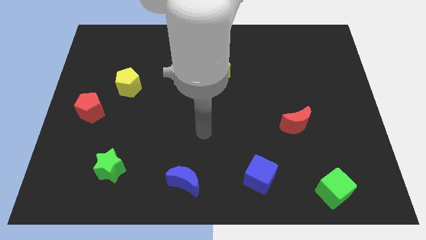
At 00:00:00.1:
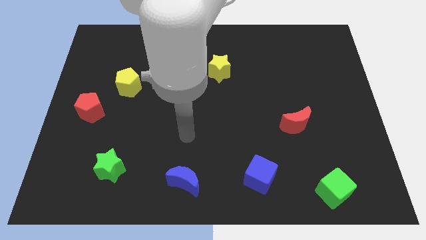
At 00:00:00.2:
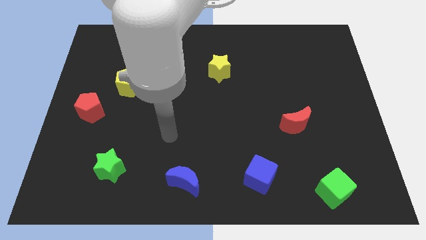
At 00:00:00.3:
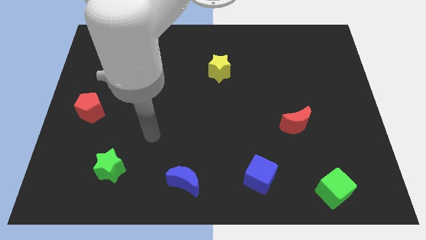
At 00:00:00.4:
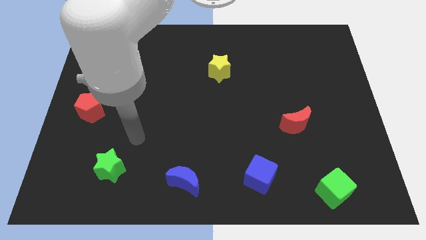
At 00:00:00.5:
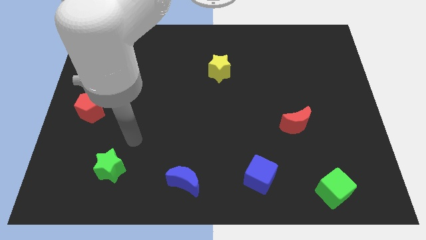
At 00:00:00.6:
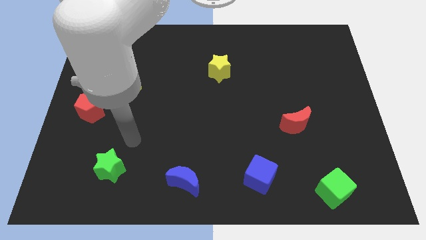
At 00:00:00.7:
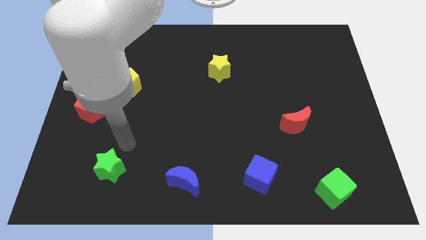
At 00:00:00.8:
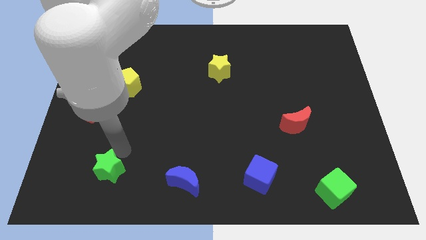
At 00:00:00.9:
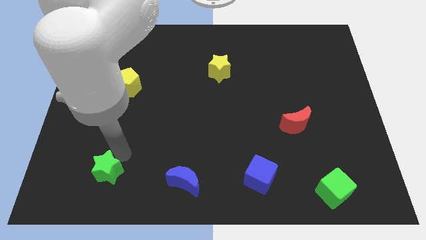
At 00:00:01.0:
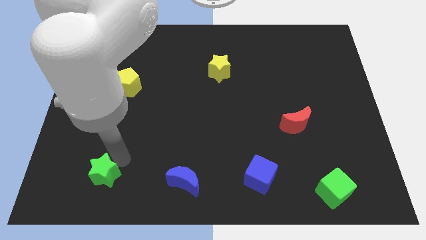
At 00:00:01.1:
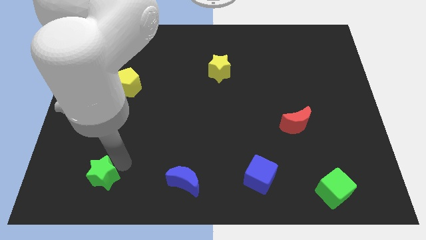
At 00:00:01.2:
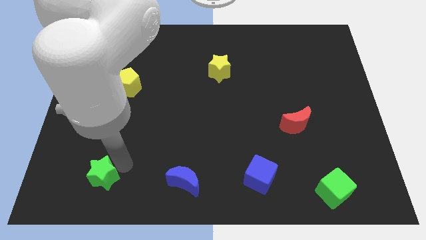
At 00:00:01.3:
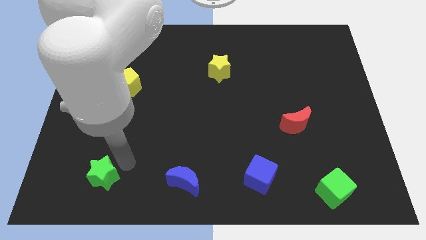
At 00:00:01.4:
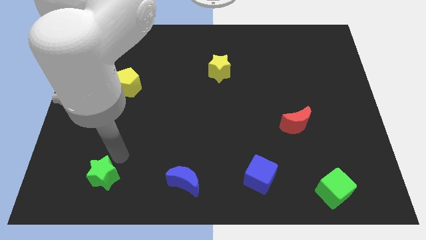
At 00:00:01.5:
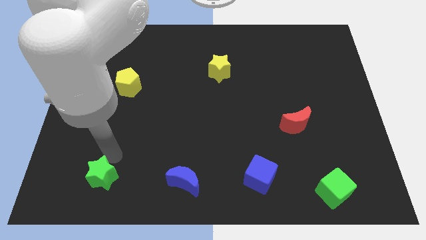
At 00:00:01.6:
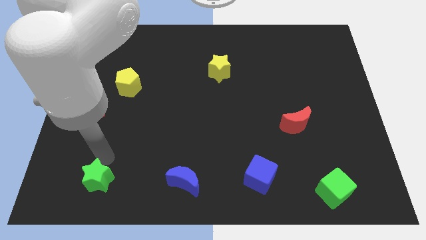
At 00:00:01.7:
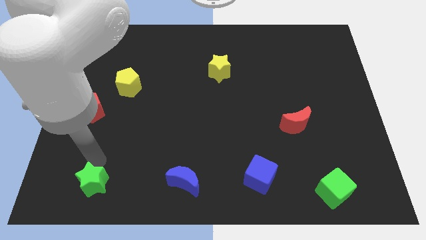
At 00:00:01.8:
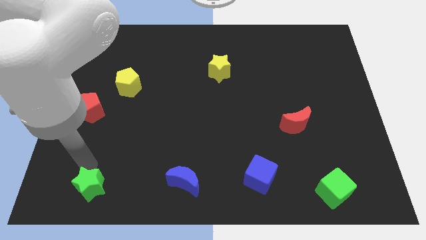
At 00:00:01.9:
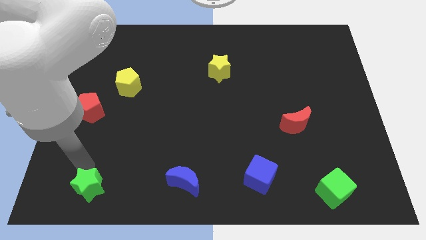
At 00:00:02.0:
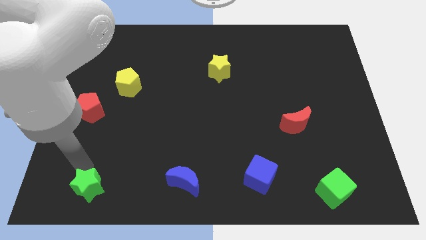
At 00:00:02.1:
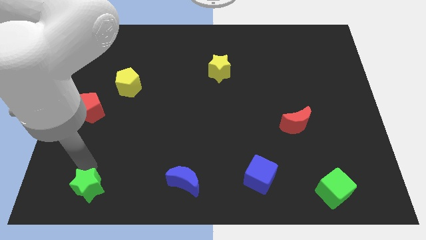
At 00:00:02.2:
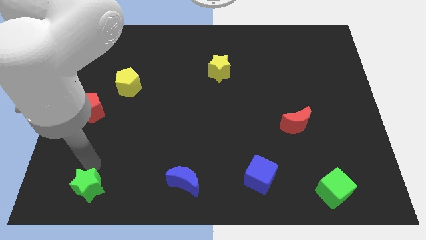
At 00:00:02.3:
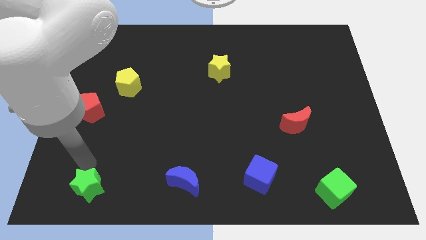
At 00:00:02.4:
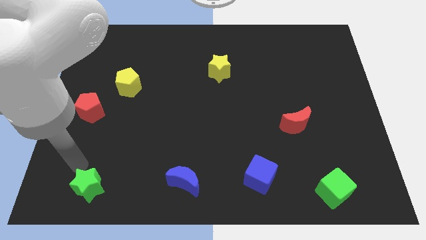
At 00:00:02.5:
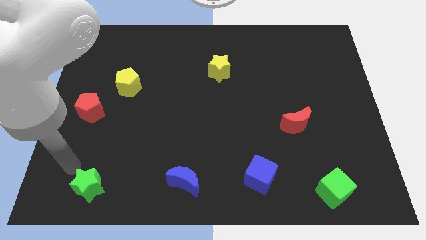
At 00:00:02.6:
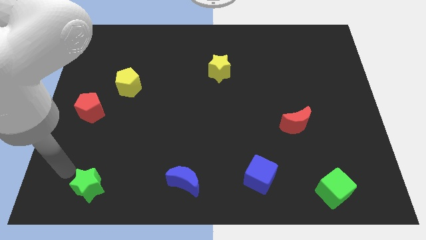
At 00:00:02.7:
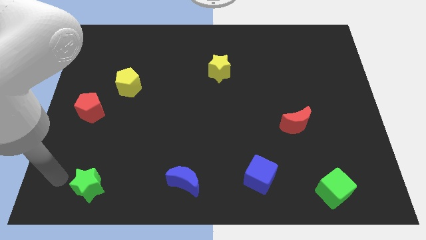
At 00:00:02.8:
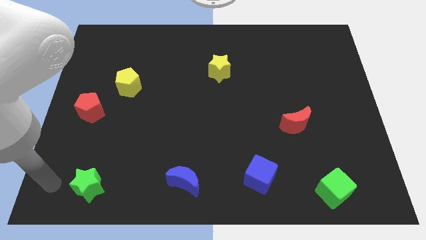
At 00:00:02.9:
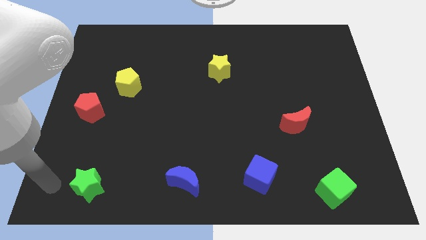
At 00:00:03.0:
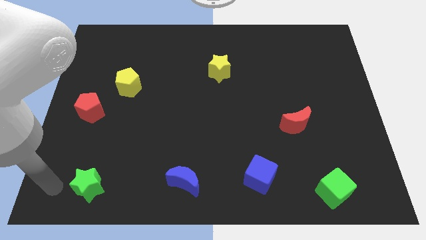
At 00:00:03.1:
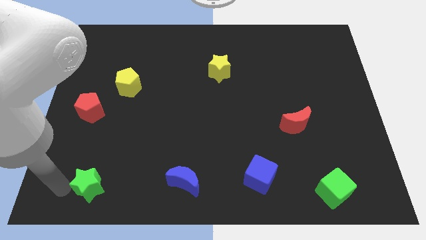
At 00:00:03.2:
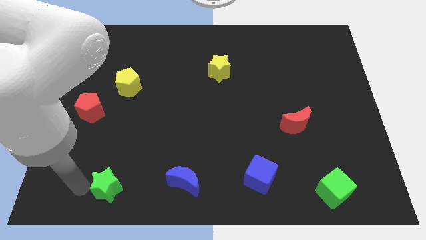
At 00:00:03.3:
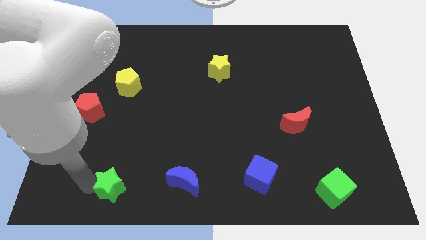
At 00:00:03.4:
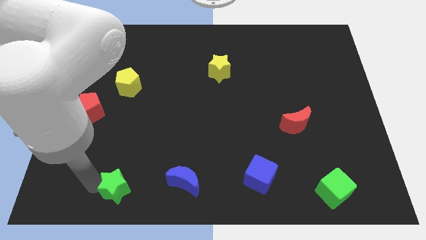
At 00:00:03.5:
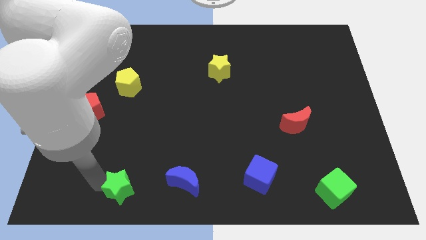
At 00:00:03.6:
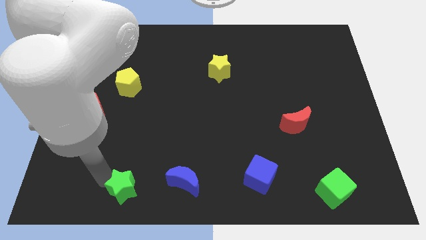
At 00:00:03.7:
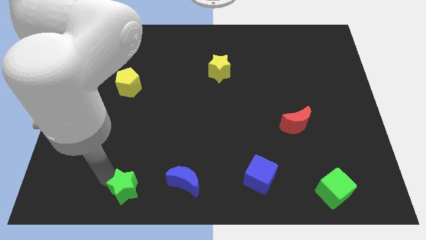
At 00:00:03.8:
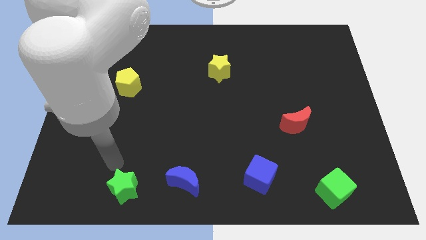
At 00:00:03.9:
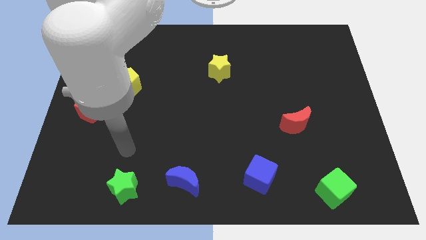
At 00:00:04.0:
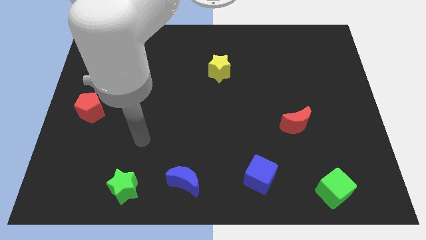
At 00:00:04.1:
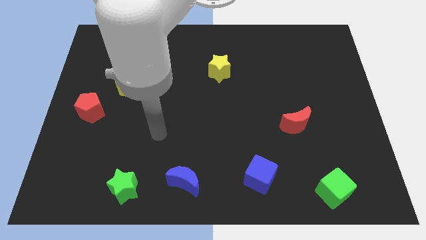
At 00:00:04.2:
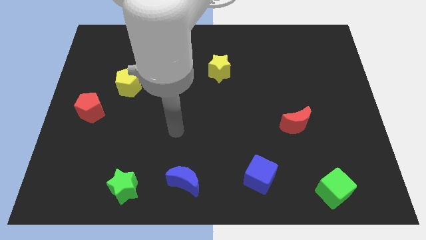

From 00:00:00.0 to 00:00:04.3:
place the green star to the left of the blue crescent

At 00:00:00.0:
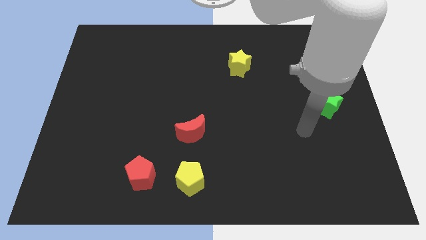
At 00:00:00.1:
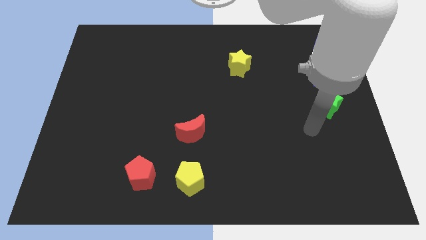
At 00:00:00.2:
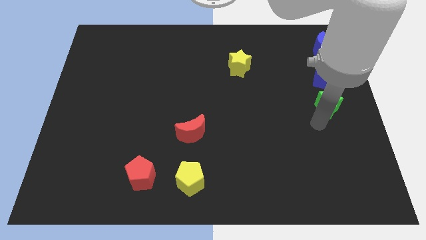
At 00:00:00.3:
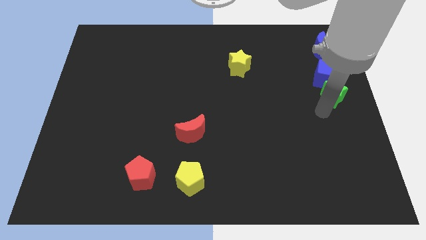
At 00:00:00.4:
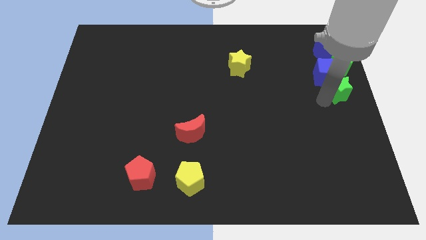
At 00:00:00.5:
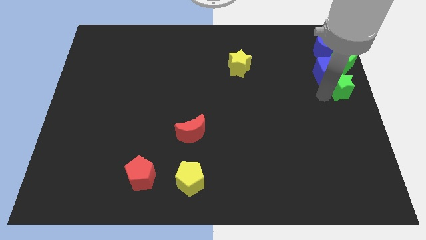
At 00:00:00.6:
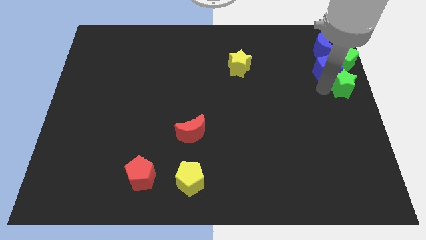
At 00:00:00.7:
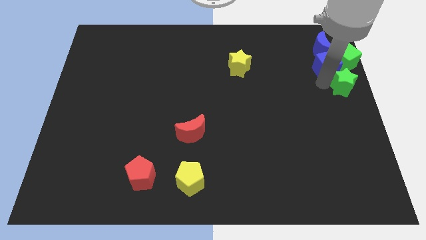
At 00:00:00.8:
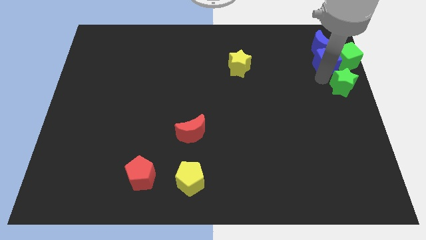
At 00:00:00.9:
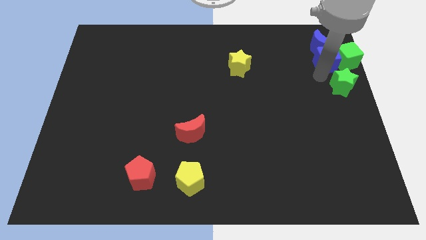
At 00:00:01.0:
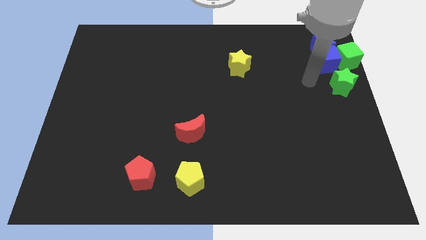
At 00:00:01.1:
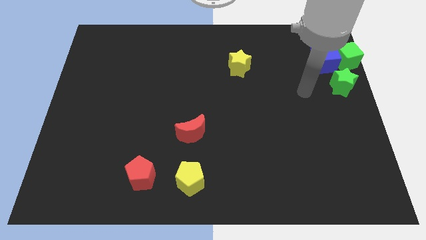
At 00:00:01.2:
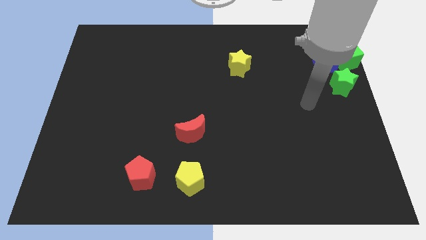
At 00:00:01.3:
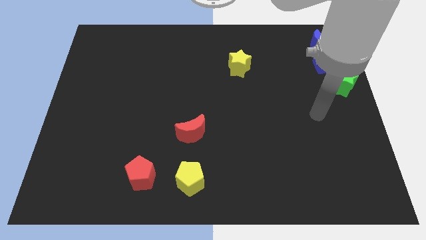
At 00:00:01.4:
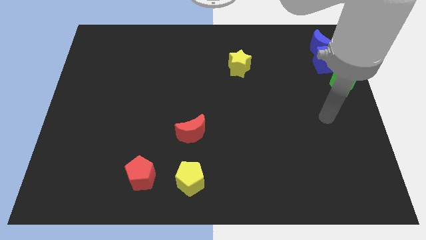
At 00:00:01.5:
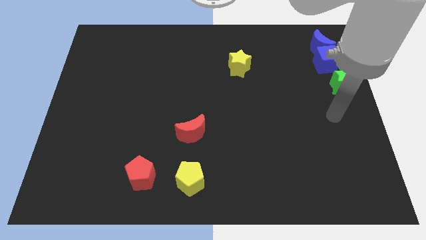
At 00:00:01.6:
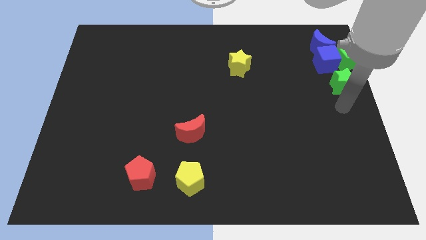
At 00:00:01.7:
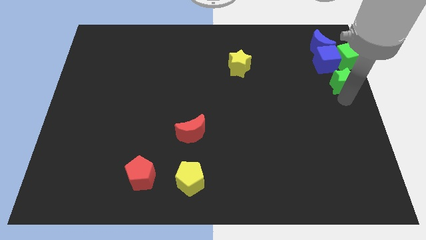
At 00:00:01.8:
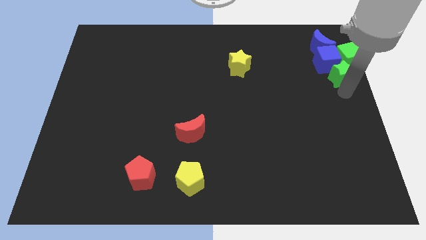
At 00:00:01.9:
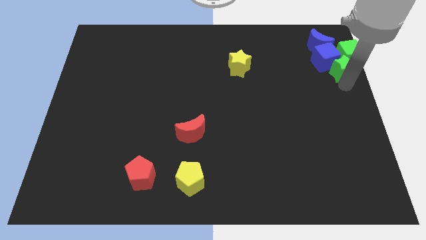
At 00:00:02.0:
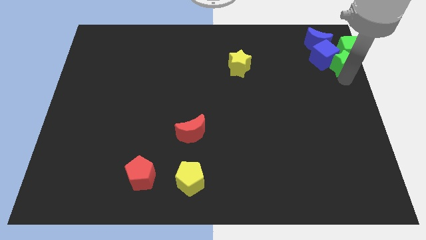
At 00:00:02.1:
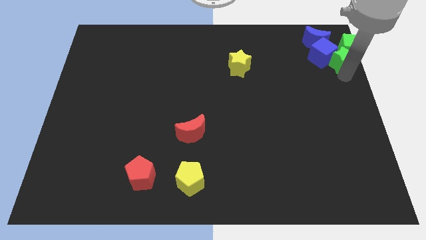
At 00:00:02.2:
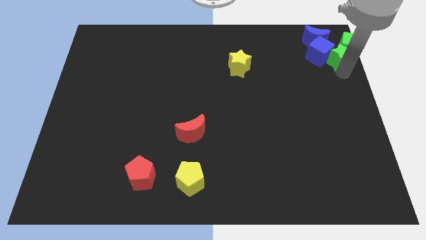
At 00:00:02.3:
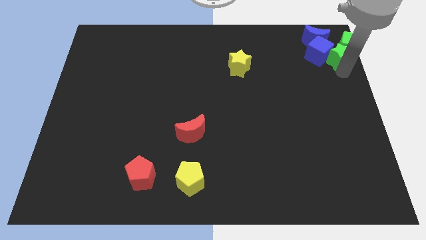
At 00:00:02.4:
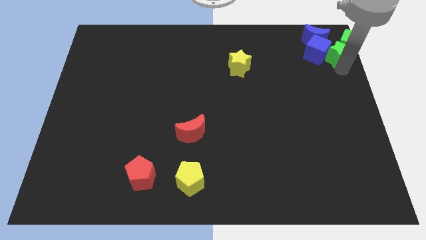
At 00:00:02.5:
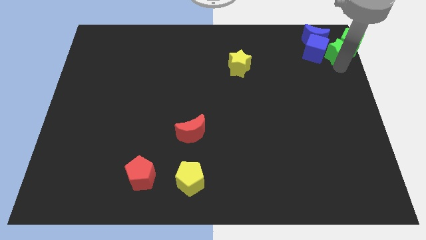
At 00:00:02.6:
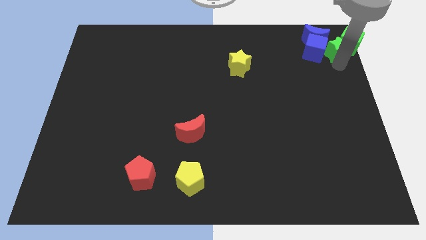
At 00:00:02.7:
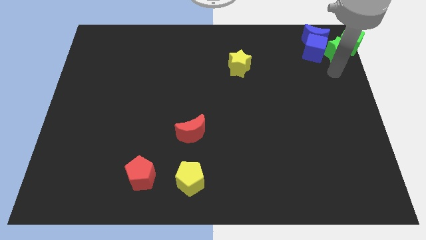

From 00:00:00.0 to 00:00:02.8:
push the green and blue blocks to the top right corner of the board

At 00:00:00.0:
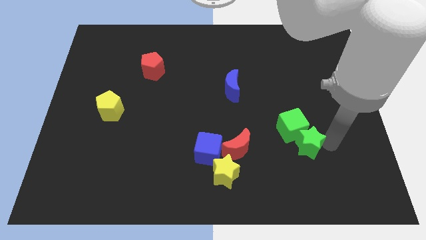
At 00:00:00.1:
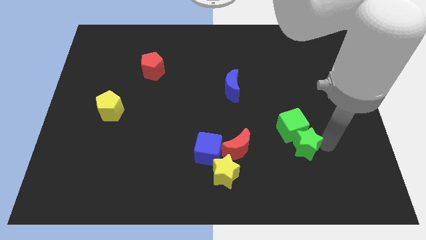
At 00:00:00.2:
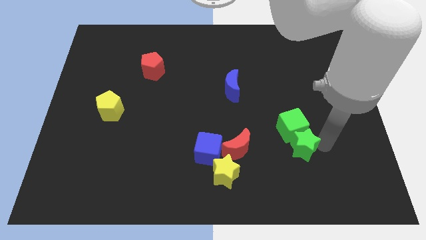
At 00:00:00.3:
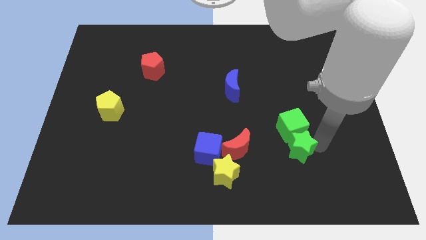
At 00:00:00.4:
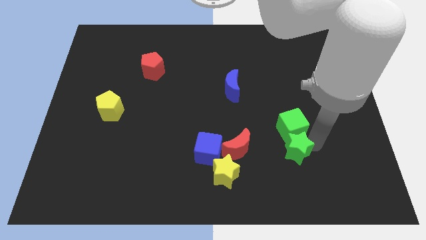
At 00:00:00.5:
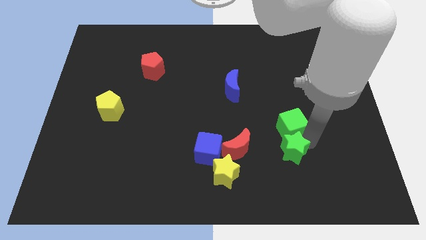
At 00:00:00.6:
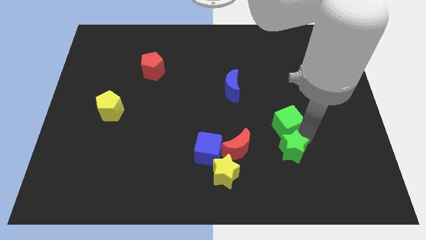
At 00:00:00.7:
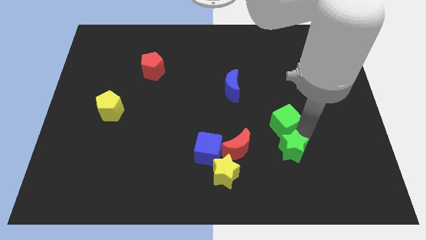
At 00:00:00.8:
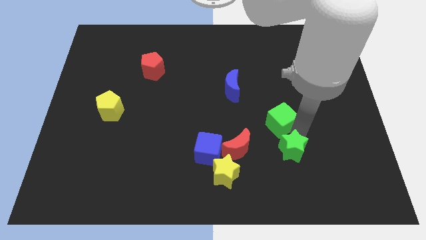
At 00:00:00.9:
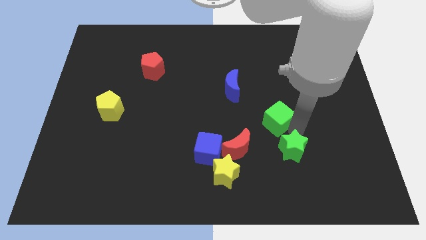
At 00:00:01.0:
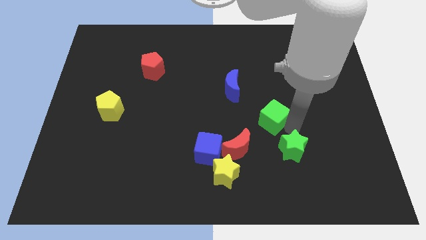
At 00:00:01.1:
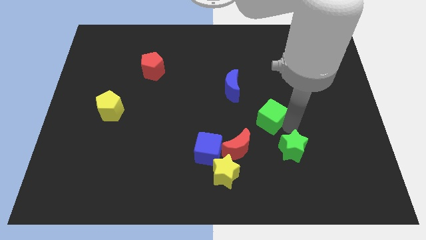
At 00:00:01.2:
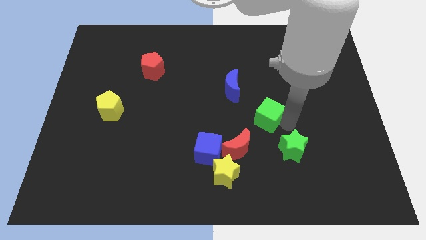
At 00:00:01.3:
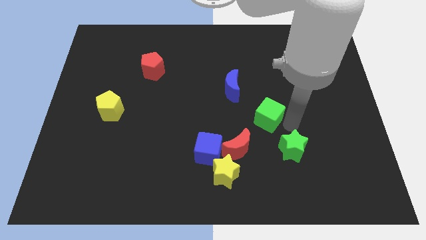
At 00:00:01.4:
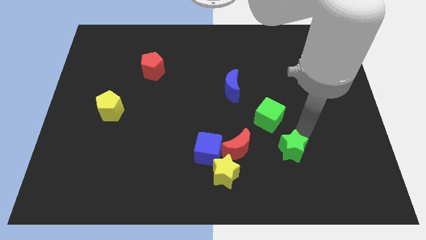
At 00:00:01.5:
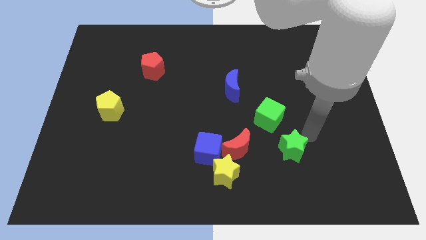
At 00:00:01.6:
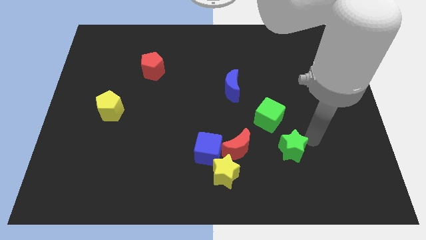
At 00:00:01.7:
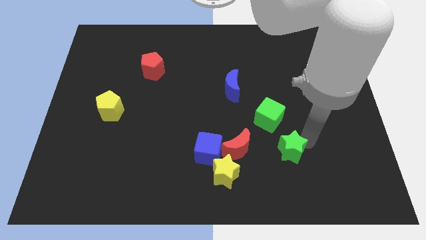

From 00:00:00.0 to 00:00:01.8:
separate green cube from the green star

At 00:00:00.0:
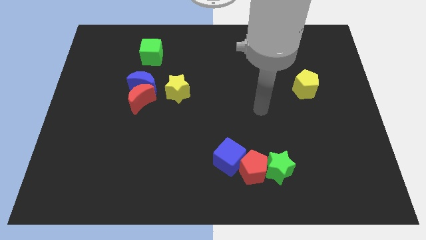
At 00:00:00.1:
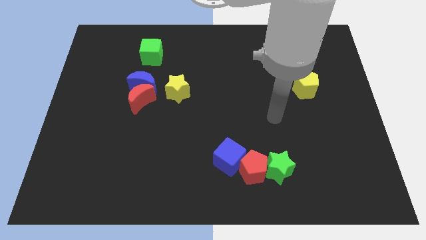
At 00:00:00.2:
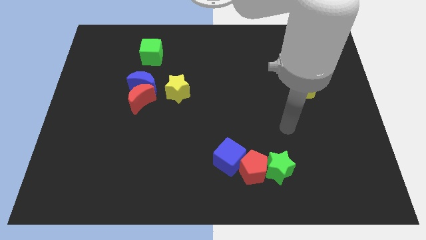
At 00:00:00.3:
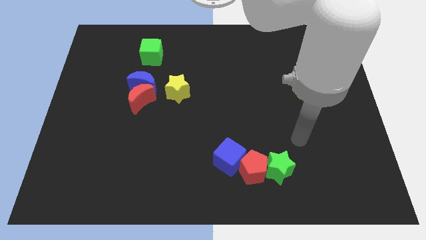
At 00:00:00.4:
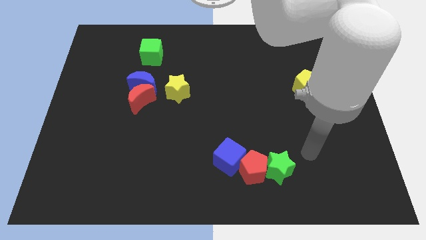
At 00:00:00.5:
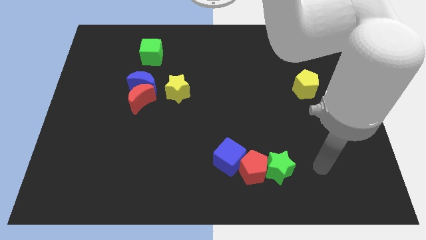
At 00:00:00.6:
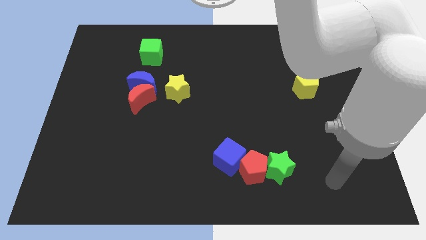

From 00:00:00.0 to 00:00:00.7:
move your arm to the right of the green star
